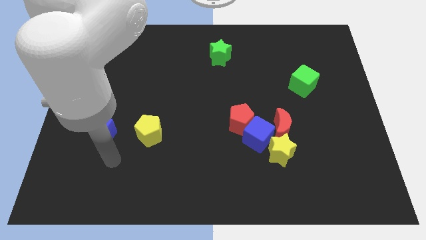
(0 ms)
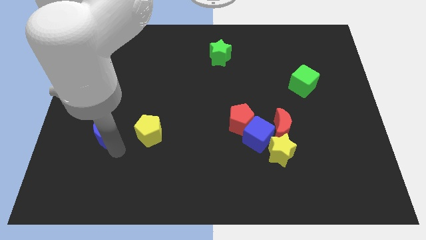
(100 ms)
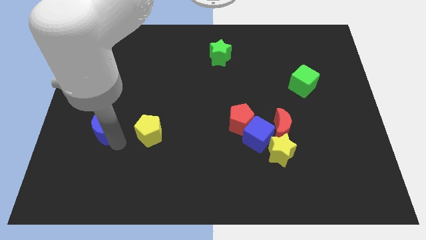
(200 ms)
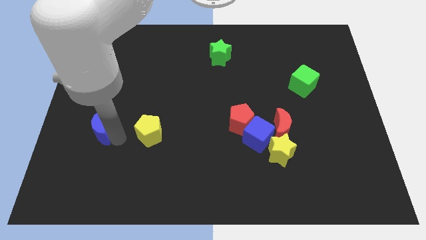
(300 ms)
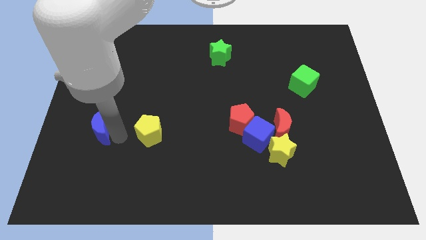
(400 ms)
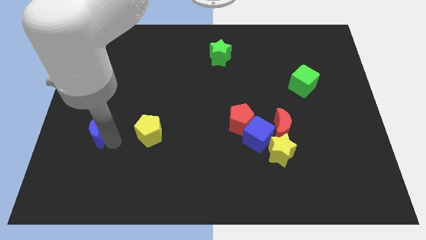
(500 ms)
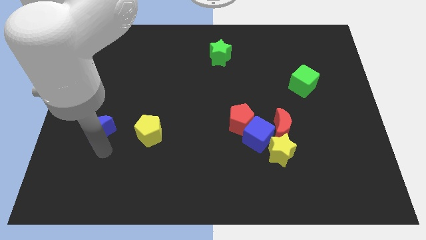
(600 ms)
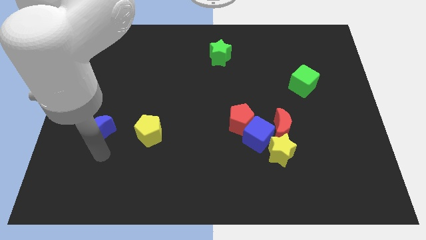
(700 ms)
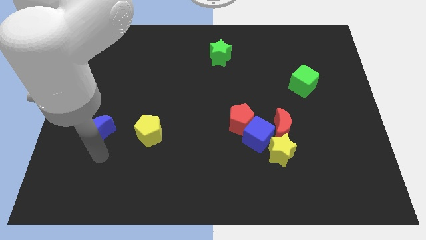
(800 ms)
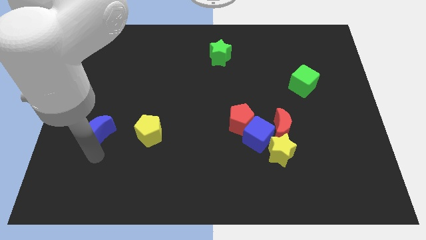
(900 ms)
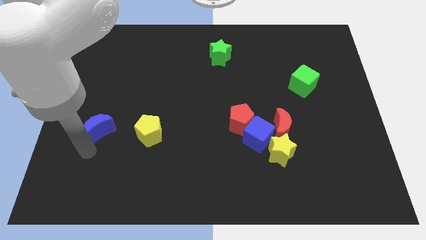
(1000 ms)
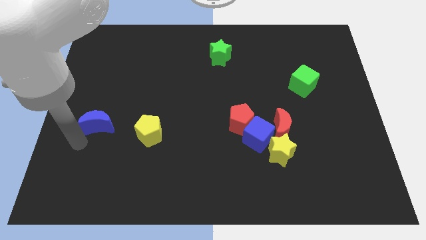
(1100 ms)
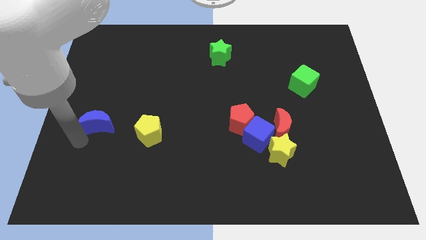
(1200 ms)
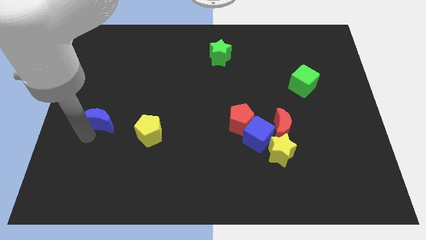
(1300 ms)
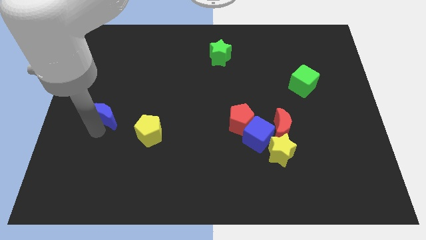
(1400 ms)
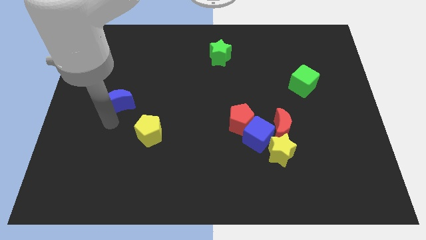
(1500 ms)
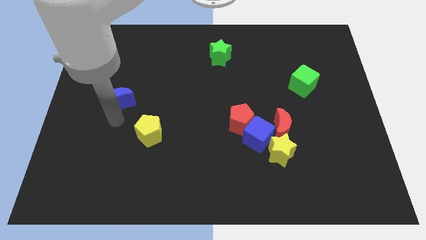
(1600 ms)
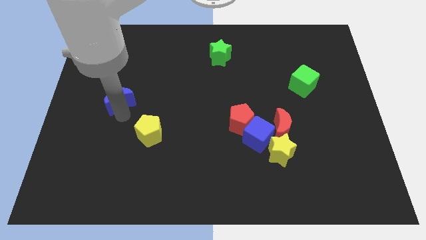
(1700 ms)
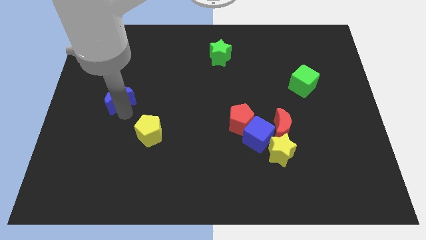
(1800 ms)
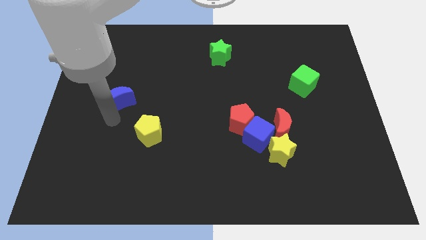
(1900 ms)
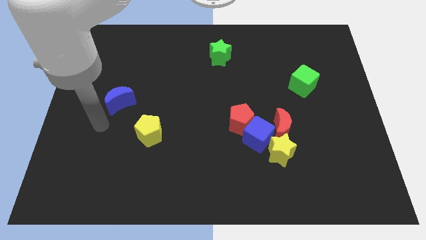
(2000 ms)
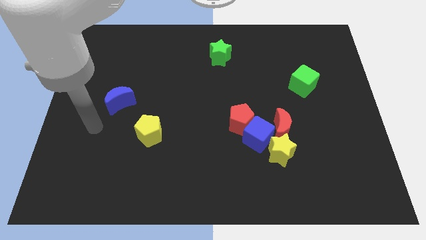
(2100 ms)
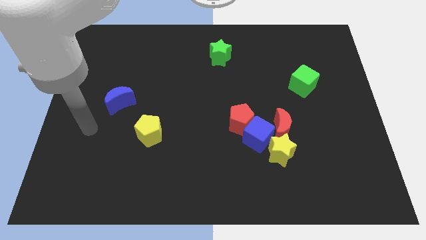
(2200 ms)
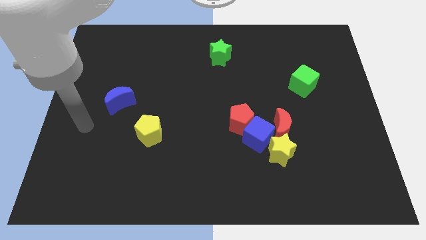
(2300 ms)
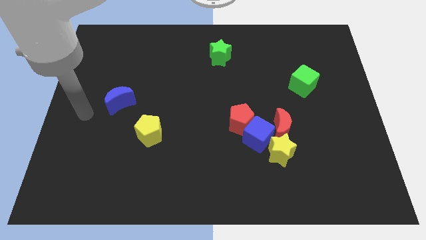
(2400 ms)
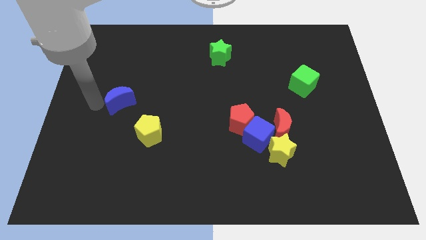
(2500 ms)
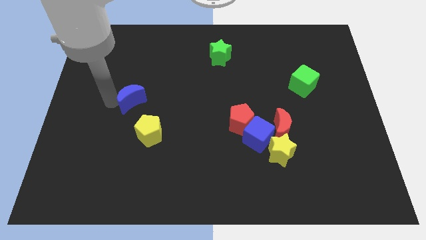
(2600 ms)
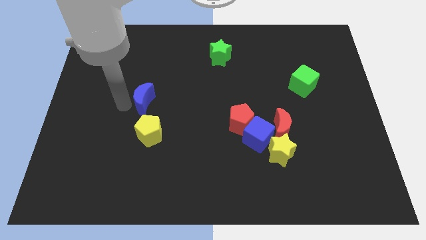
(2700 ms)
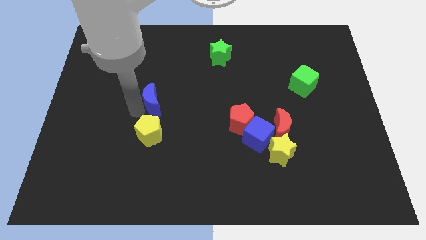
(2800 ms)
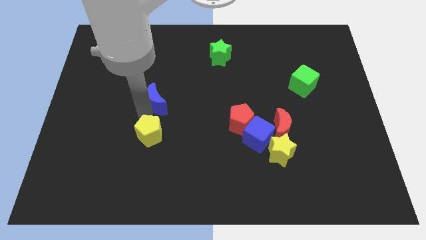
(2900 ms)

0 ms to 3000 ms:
place blue crescent above yellow pentagon

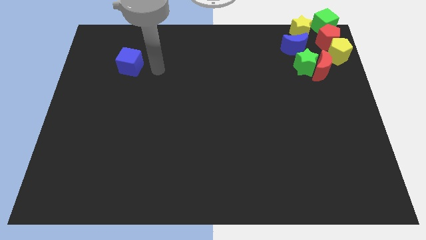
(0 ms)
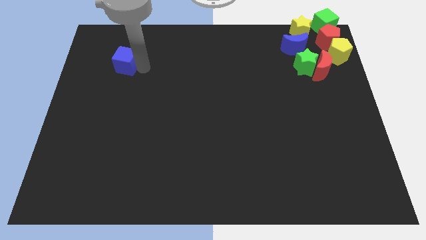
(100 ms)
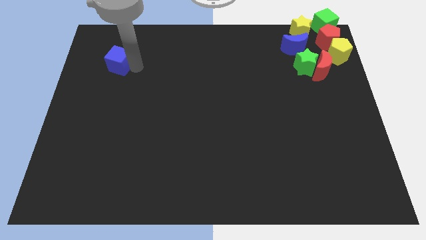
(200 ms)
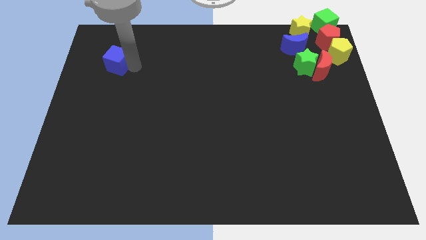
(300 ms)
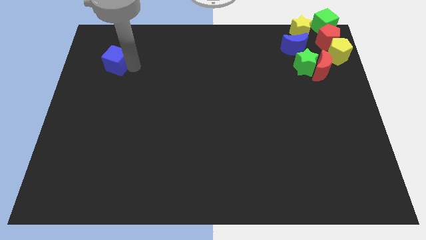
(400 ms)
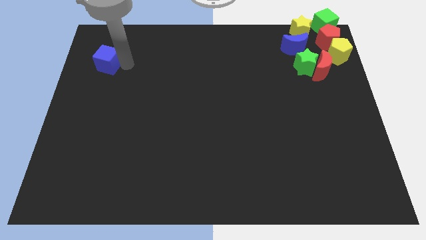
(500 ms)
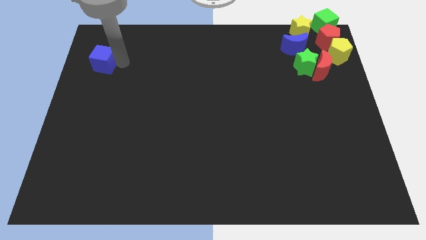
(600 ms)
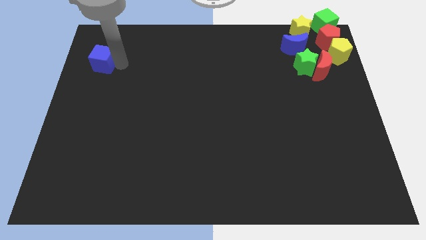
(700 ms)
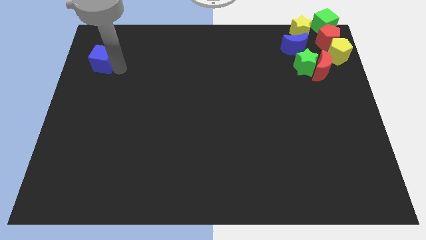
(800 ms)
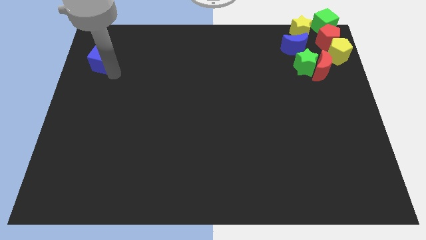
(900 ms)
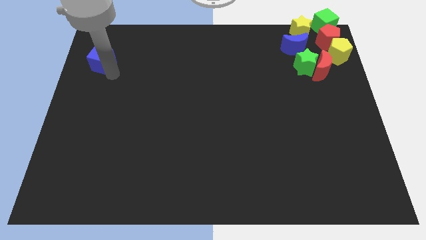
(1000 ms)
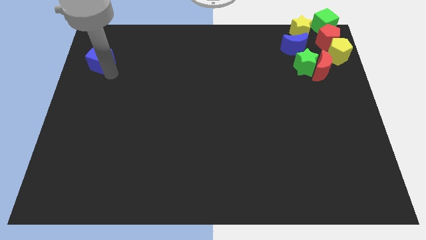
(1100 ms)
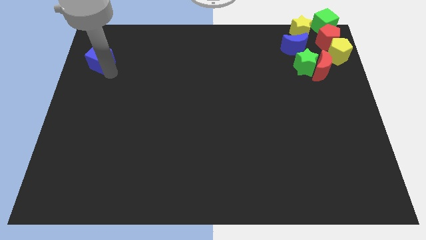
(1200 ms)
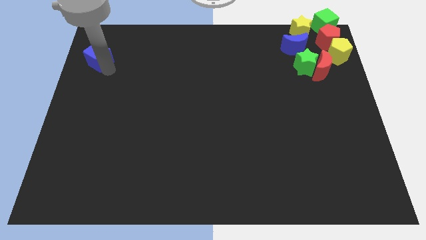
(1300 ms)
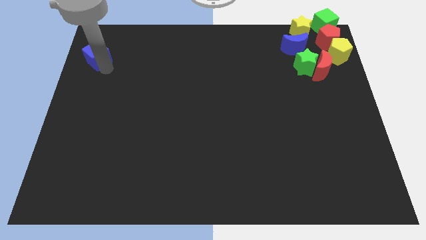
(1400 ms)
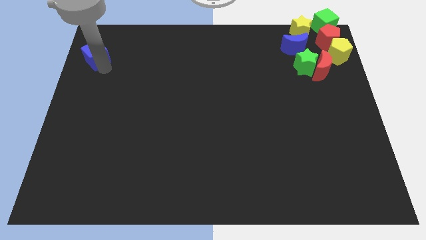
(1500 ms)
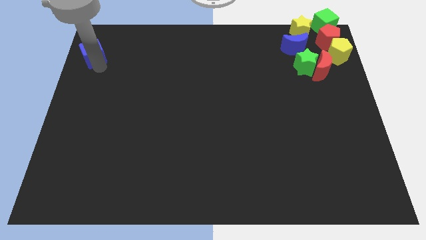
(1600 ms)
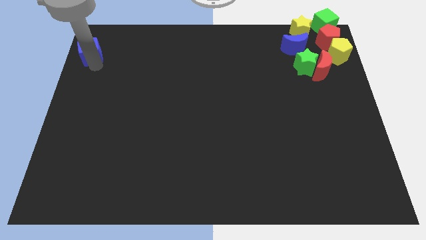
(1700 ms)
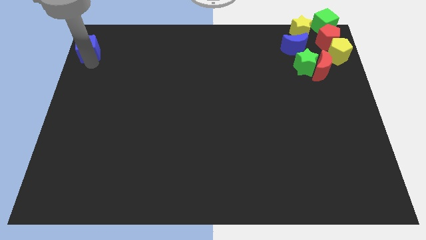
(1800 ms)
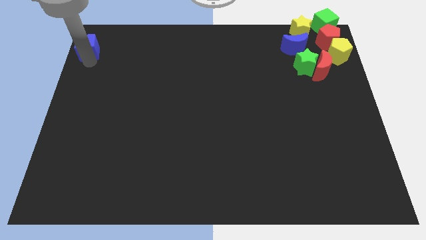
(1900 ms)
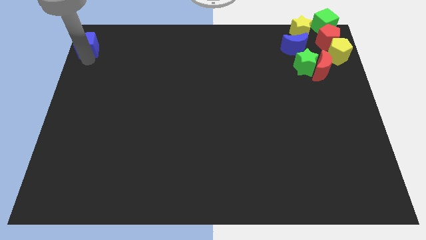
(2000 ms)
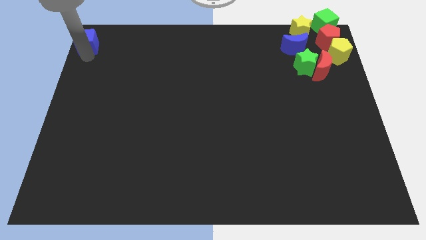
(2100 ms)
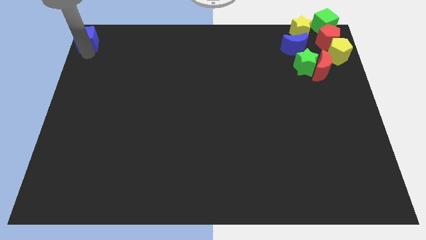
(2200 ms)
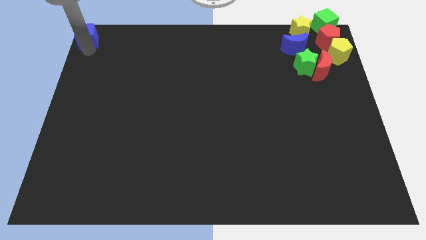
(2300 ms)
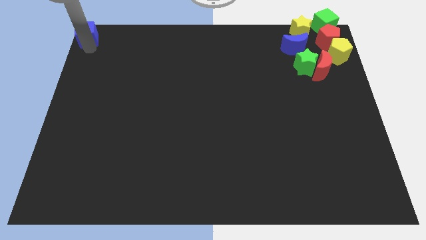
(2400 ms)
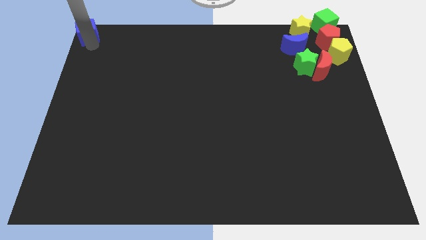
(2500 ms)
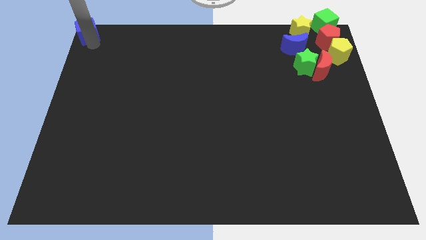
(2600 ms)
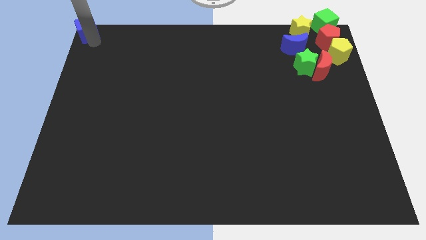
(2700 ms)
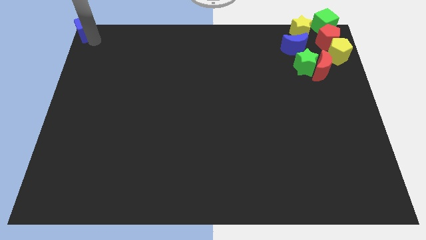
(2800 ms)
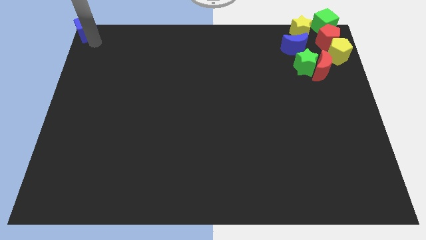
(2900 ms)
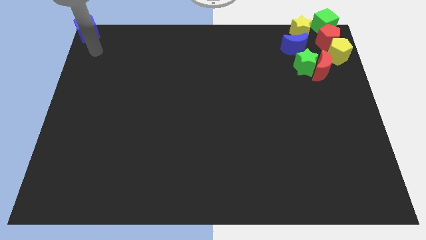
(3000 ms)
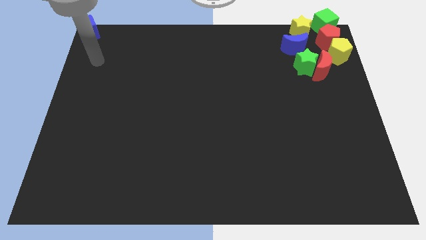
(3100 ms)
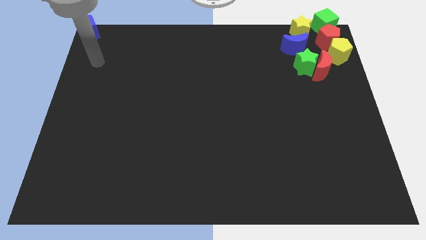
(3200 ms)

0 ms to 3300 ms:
move blue cube towards top left corner

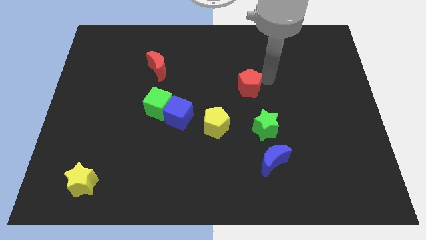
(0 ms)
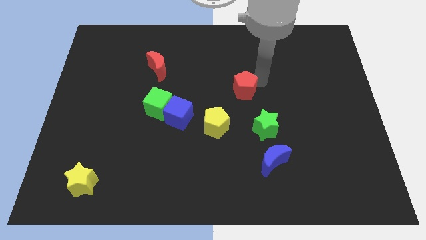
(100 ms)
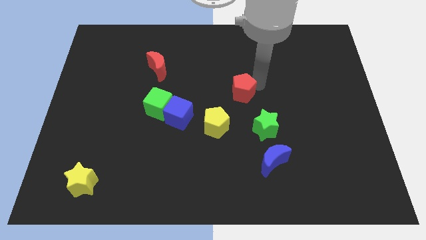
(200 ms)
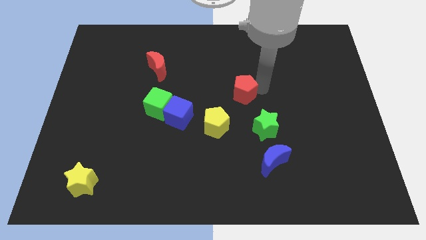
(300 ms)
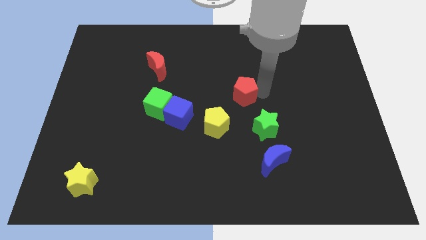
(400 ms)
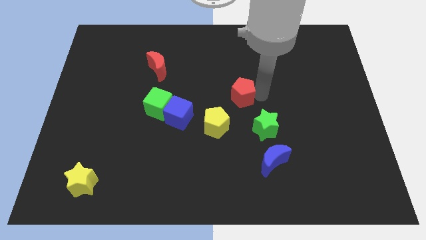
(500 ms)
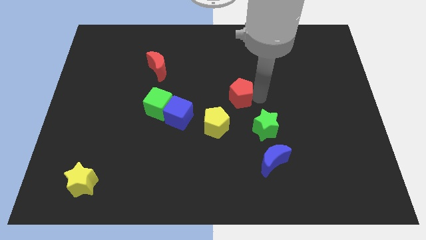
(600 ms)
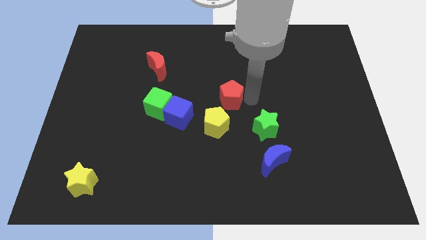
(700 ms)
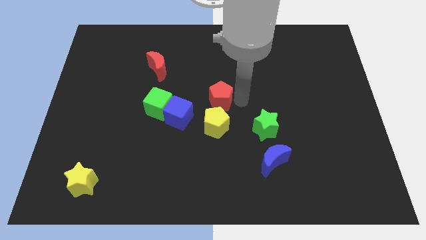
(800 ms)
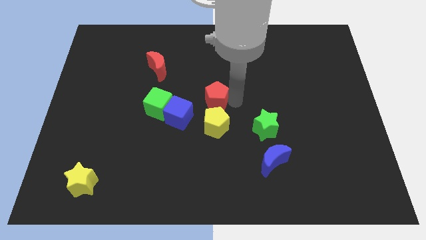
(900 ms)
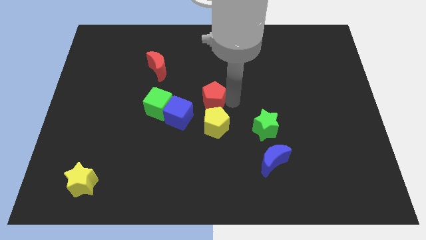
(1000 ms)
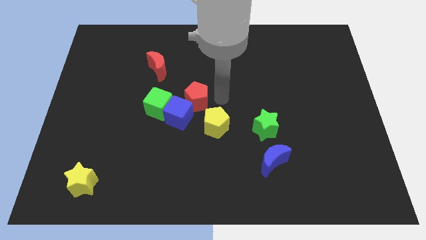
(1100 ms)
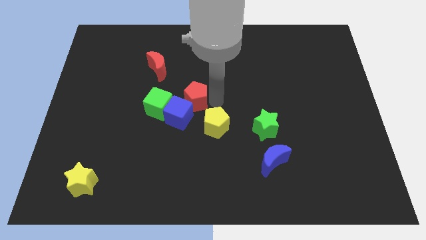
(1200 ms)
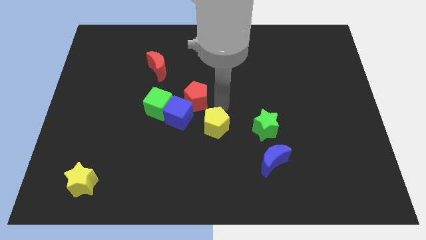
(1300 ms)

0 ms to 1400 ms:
move the red pentagon to top of the blue cube

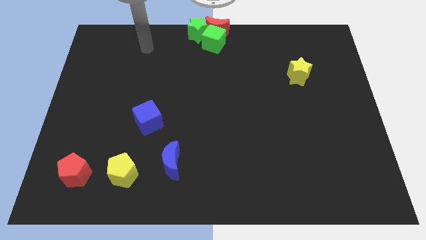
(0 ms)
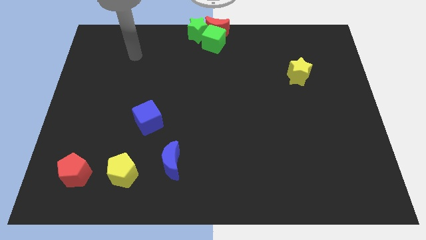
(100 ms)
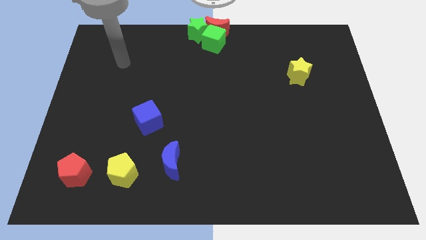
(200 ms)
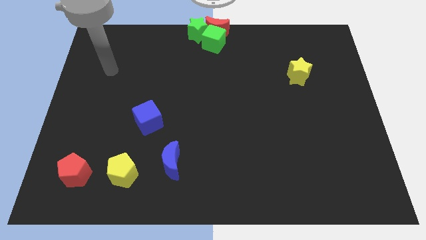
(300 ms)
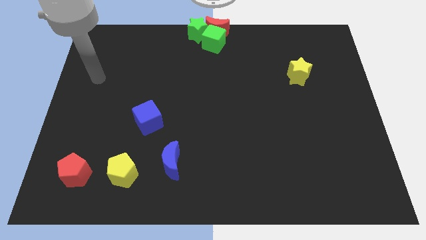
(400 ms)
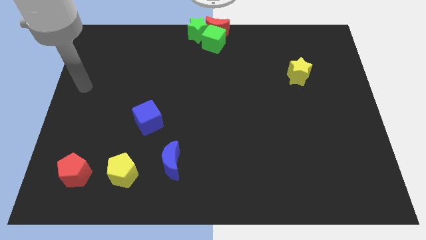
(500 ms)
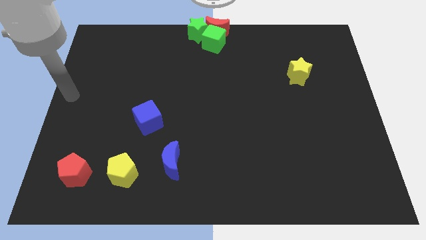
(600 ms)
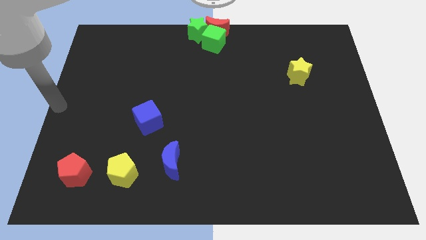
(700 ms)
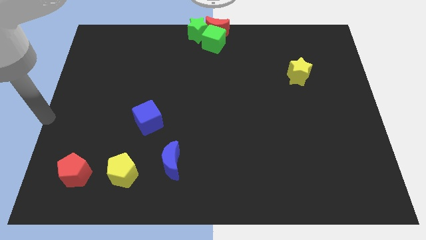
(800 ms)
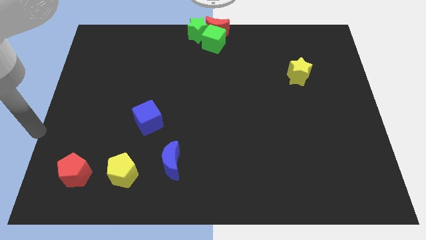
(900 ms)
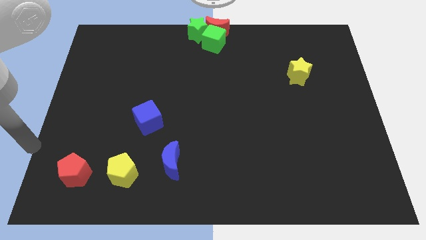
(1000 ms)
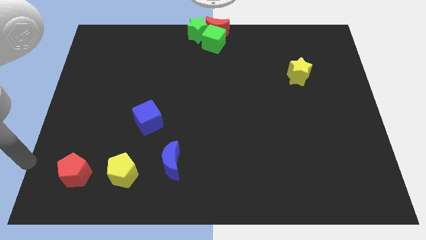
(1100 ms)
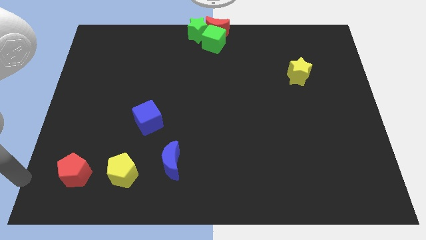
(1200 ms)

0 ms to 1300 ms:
move your arm at the left side of the red pentagon

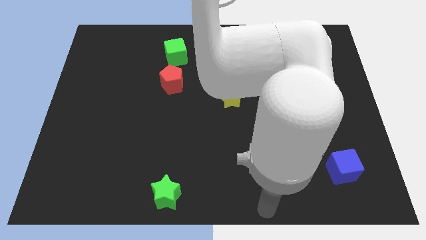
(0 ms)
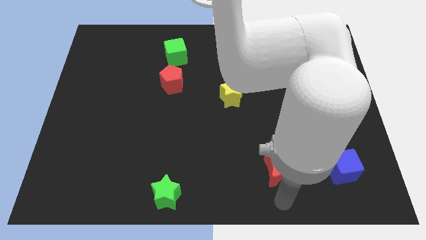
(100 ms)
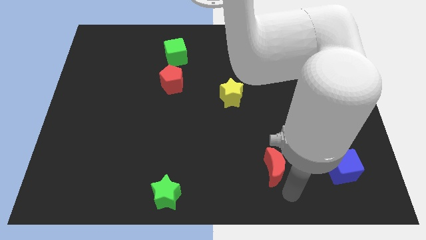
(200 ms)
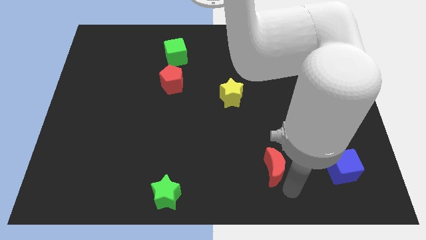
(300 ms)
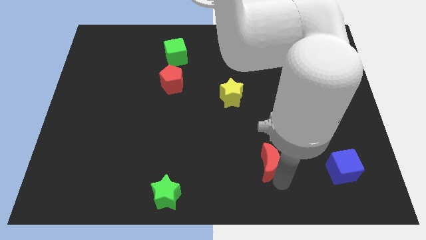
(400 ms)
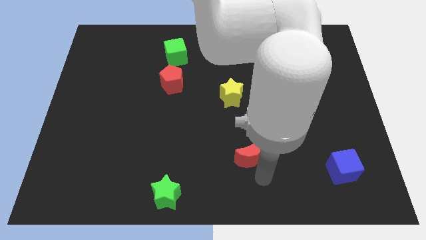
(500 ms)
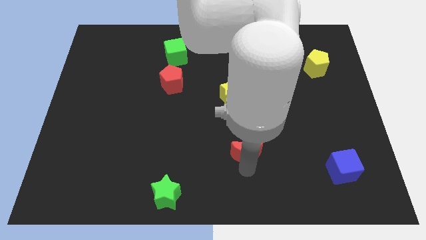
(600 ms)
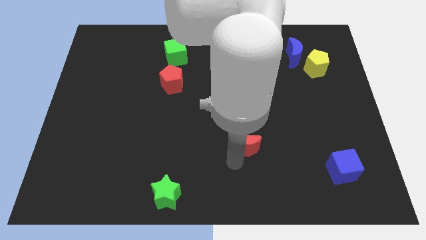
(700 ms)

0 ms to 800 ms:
move the red crescent towards the top of the board
